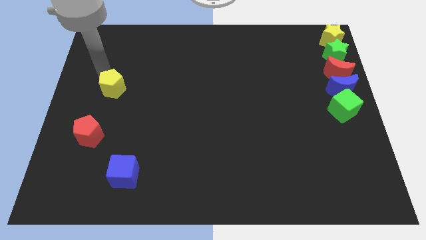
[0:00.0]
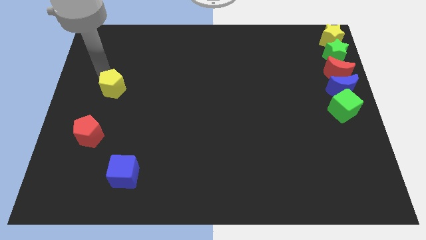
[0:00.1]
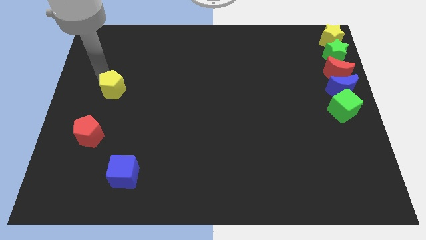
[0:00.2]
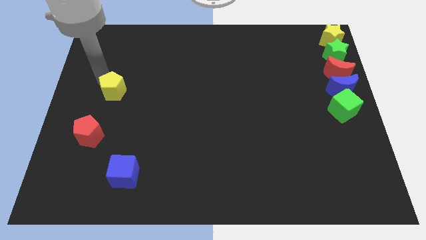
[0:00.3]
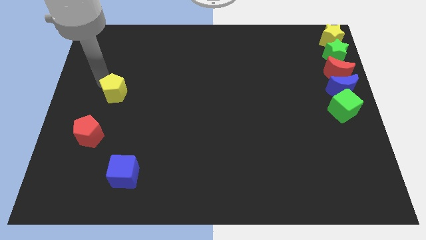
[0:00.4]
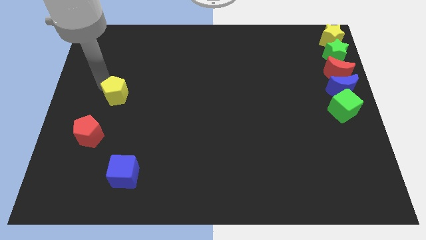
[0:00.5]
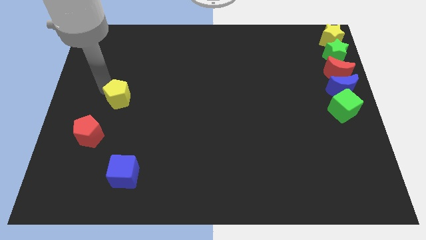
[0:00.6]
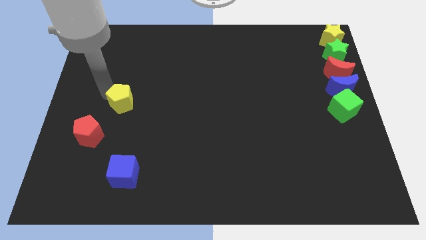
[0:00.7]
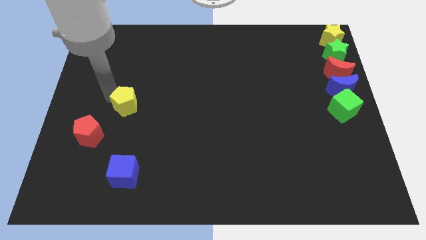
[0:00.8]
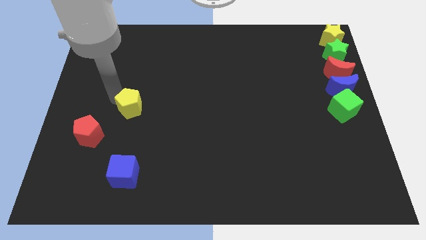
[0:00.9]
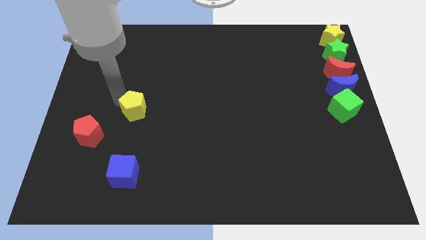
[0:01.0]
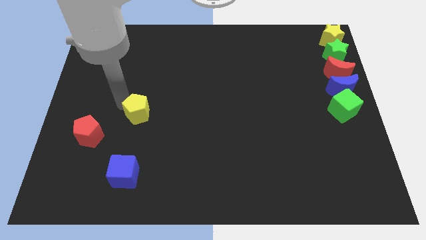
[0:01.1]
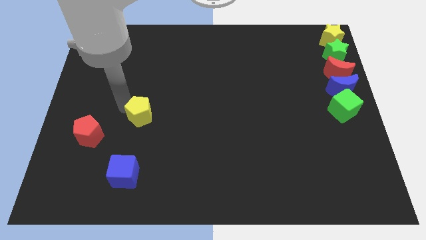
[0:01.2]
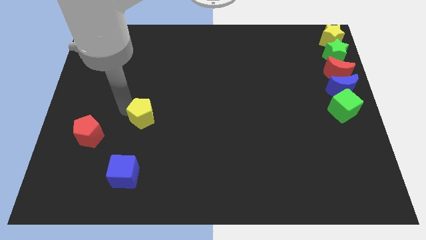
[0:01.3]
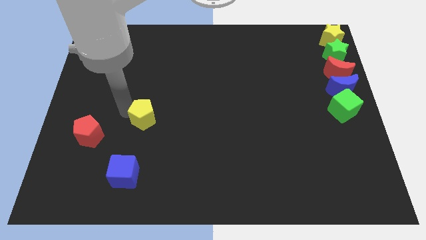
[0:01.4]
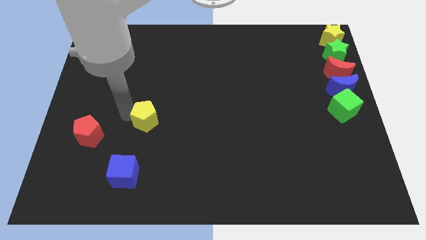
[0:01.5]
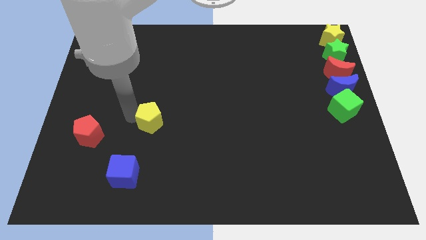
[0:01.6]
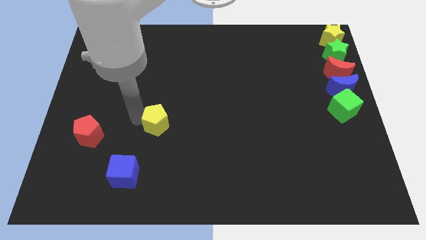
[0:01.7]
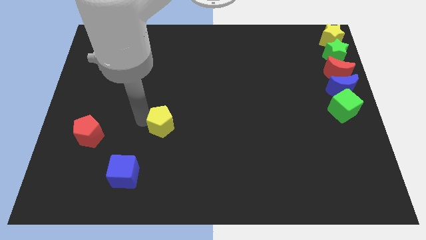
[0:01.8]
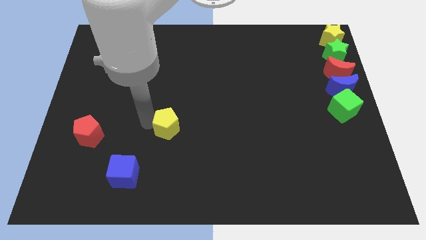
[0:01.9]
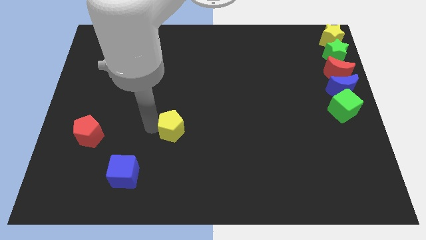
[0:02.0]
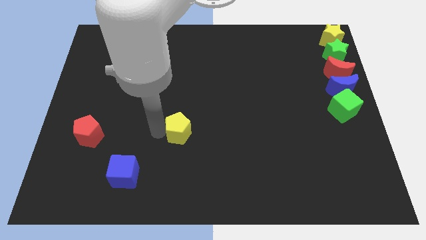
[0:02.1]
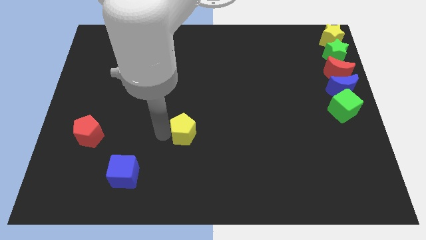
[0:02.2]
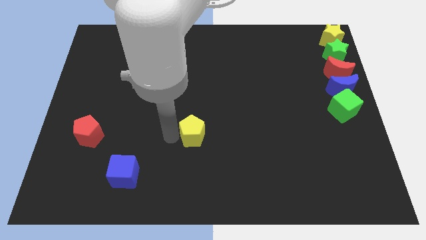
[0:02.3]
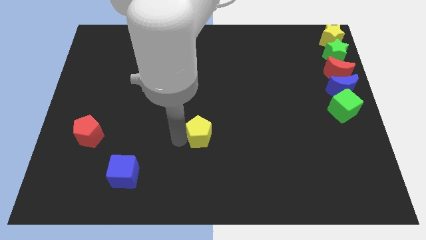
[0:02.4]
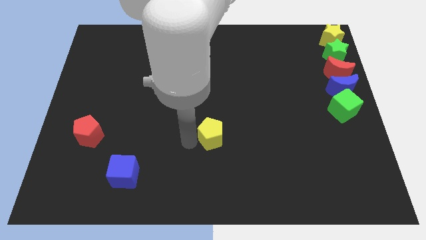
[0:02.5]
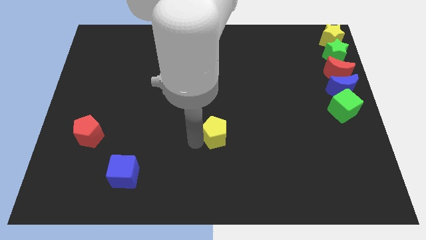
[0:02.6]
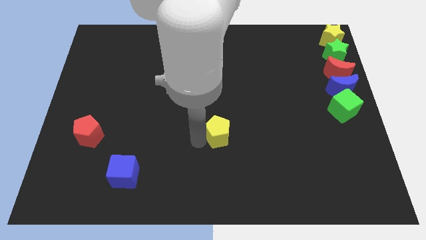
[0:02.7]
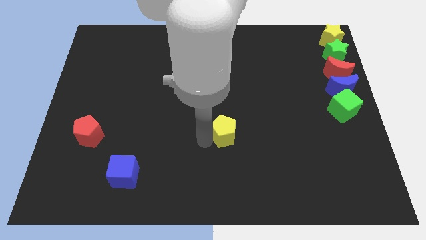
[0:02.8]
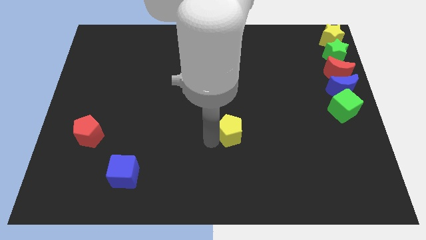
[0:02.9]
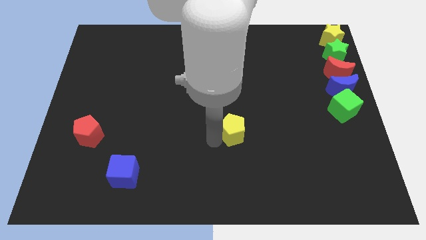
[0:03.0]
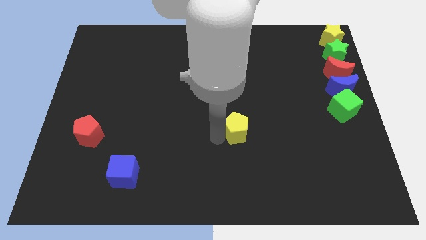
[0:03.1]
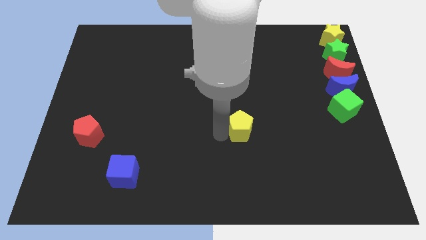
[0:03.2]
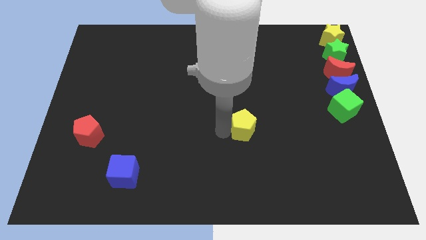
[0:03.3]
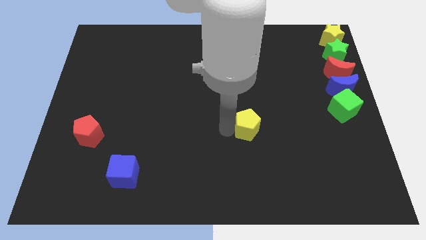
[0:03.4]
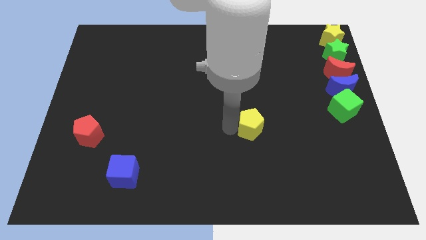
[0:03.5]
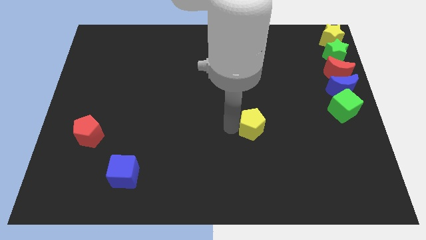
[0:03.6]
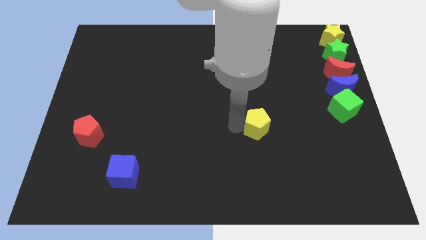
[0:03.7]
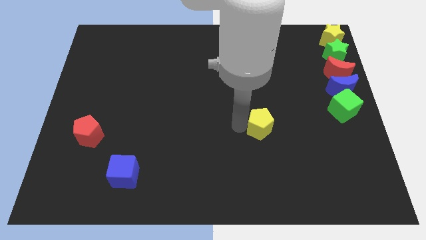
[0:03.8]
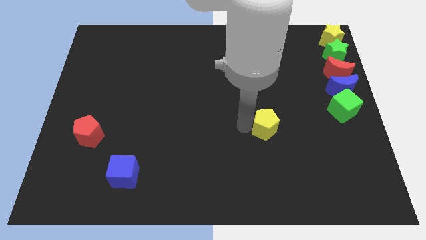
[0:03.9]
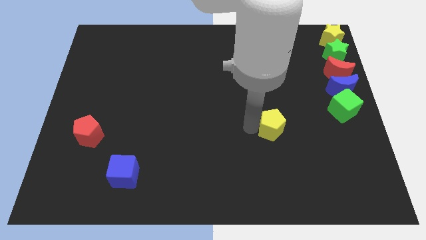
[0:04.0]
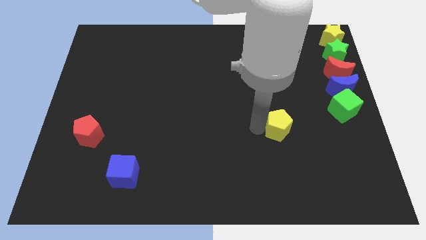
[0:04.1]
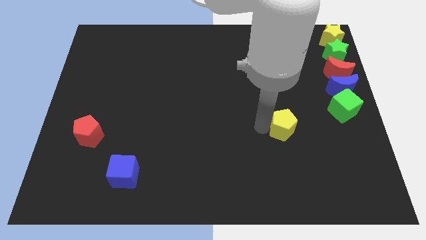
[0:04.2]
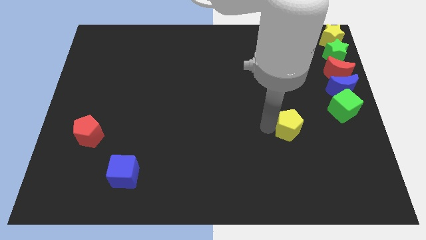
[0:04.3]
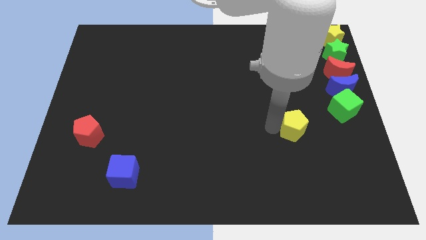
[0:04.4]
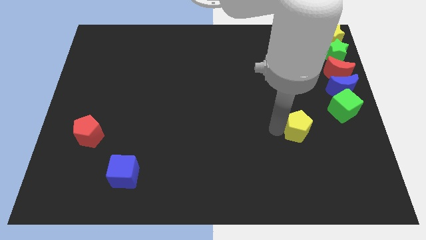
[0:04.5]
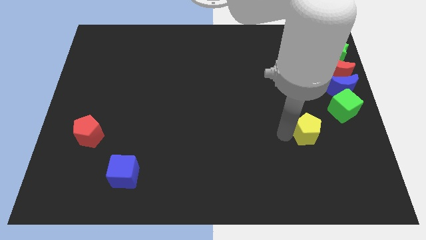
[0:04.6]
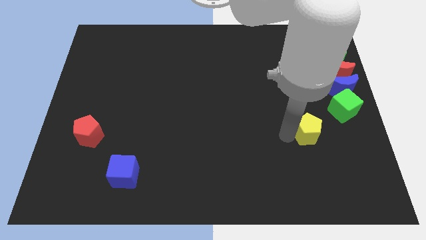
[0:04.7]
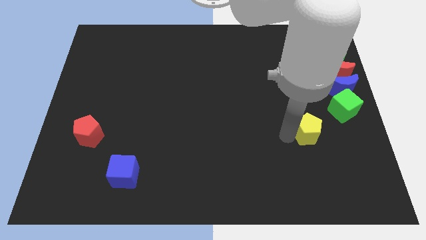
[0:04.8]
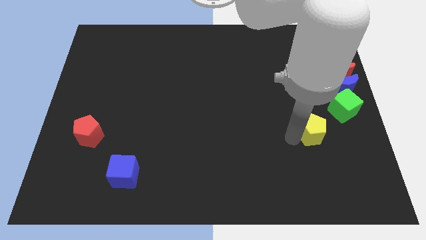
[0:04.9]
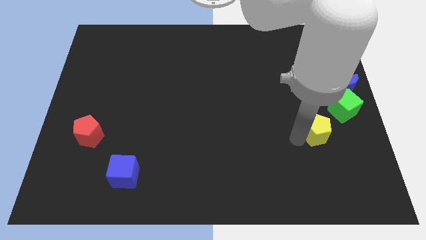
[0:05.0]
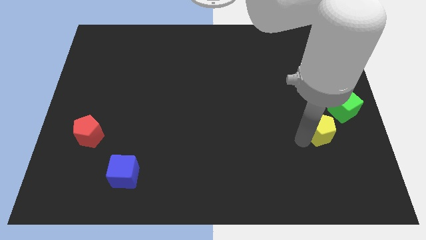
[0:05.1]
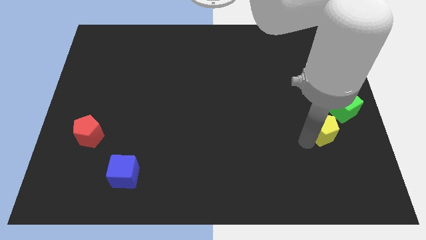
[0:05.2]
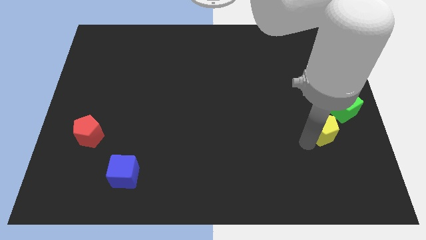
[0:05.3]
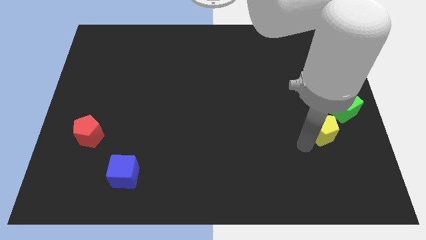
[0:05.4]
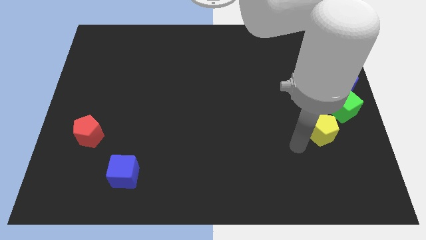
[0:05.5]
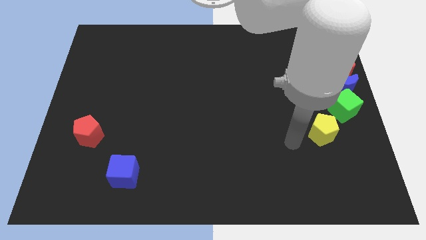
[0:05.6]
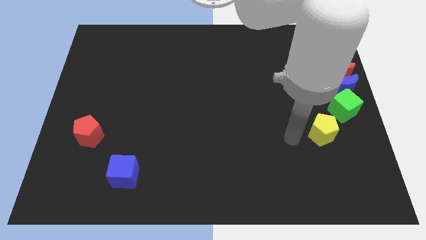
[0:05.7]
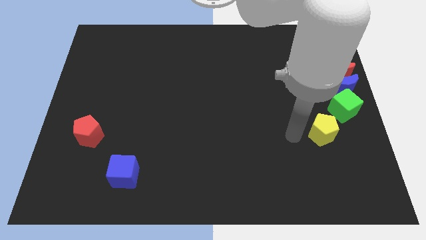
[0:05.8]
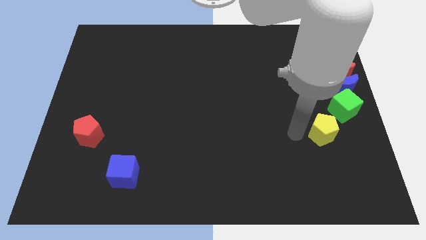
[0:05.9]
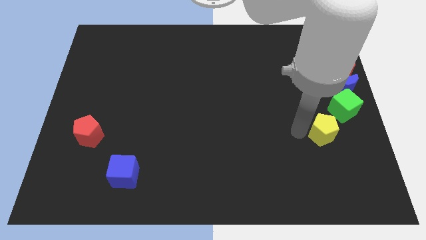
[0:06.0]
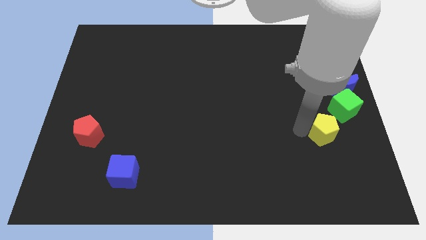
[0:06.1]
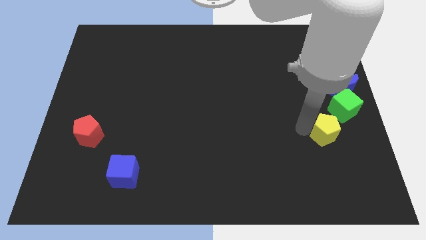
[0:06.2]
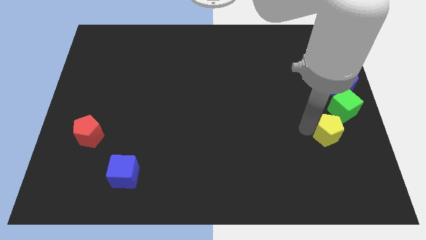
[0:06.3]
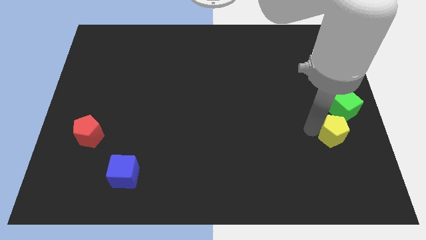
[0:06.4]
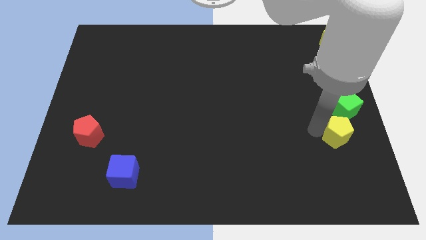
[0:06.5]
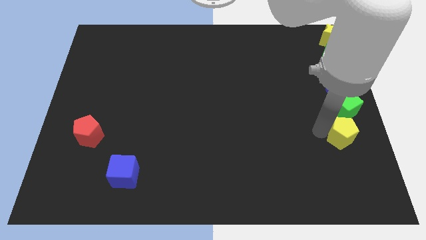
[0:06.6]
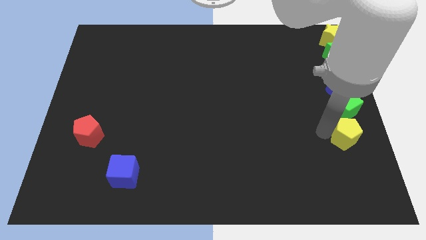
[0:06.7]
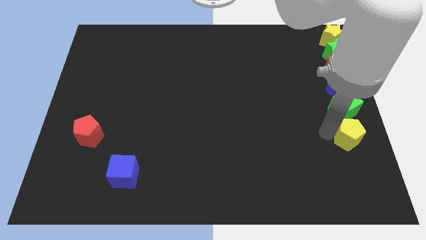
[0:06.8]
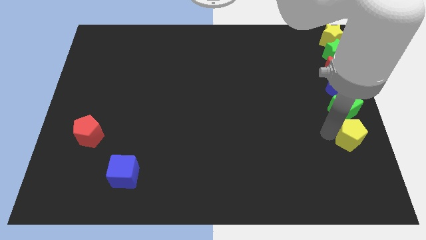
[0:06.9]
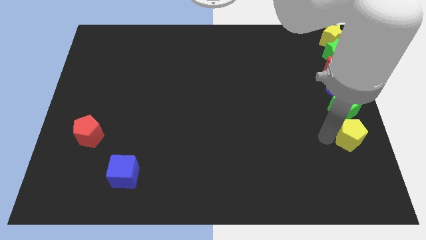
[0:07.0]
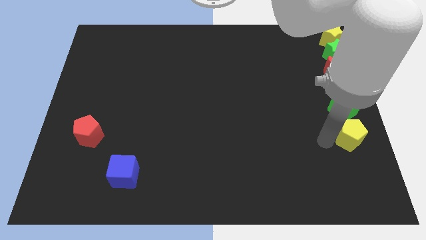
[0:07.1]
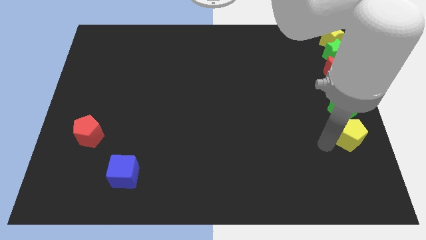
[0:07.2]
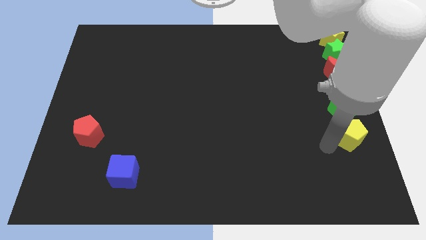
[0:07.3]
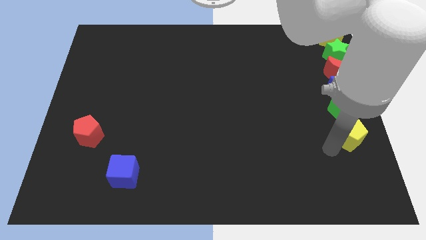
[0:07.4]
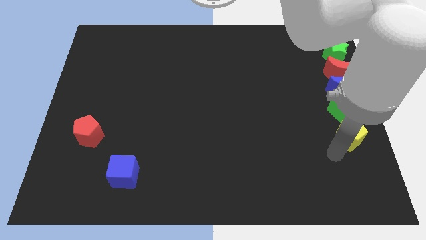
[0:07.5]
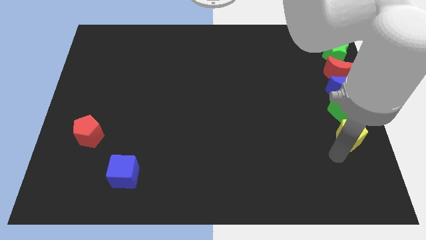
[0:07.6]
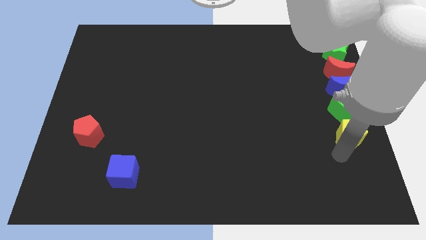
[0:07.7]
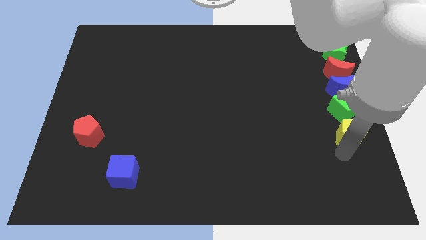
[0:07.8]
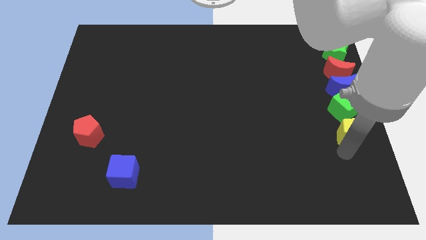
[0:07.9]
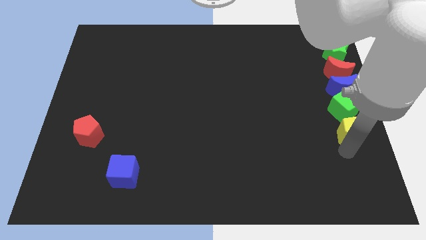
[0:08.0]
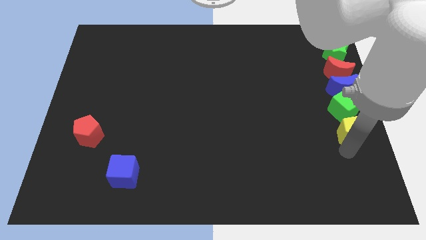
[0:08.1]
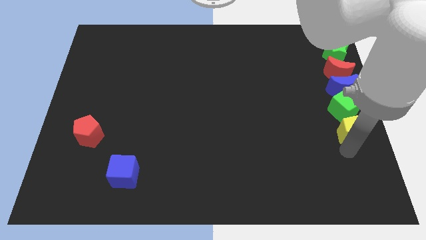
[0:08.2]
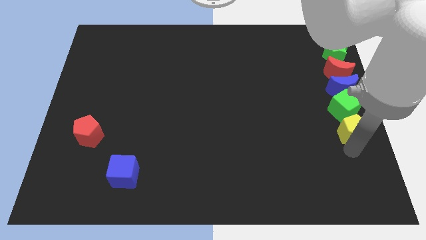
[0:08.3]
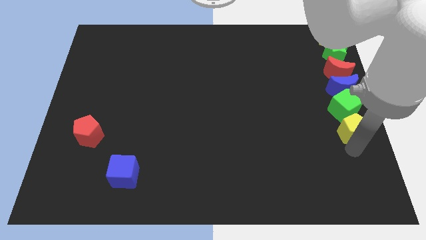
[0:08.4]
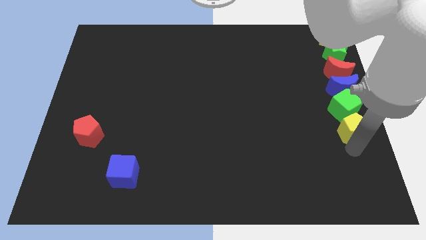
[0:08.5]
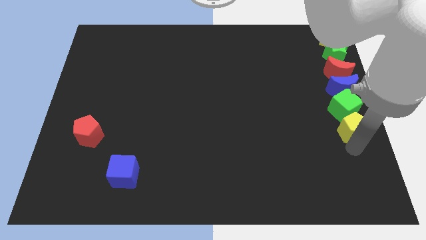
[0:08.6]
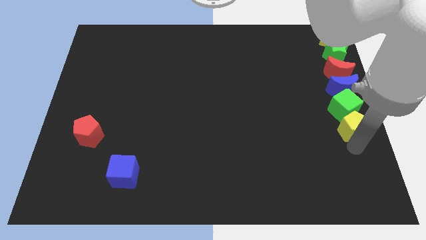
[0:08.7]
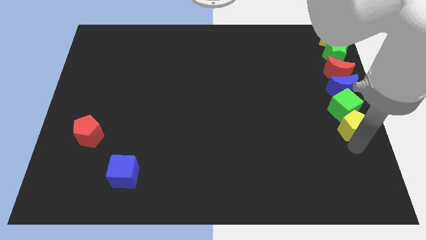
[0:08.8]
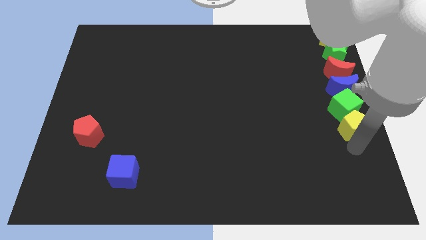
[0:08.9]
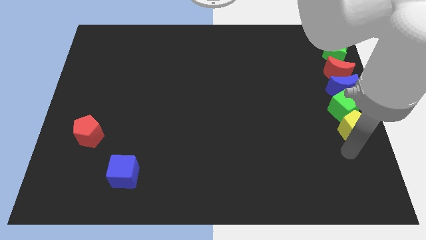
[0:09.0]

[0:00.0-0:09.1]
move the yellow pentagon below to the green cube

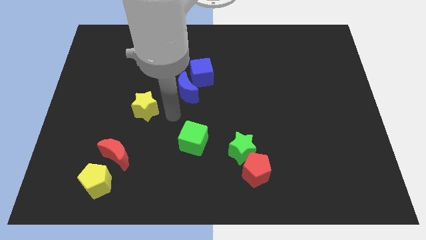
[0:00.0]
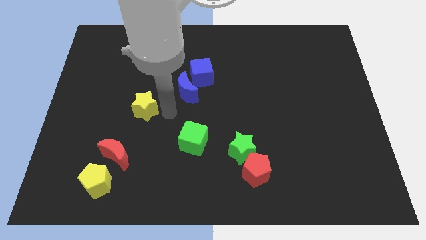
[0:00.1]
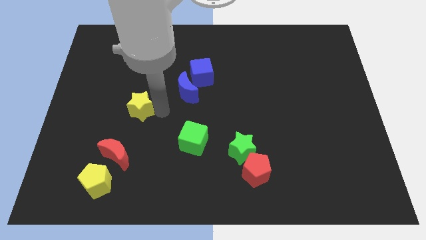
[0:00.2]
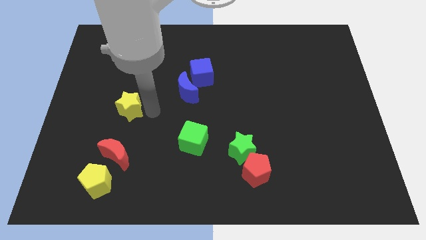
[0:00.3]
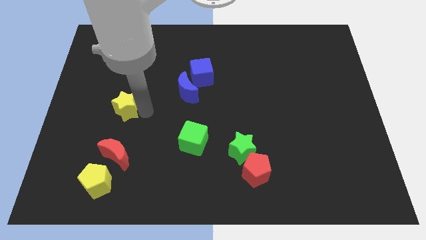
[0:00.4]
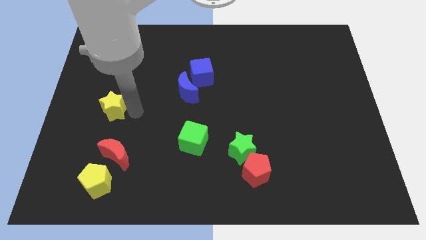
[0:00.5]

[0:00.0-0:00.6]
push yellow star above red crescent
